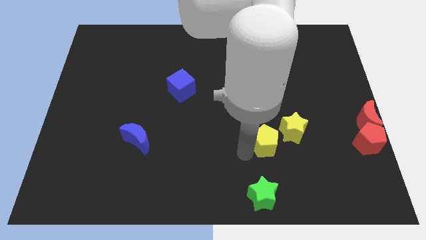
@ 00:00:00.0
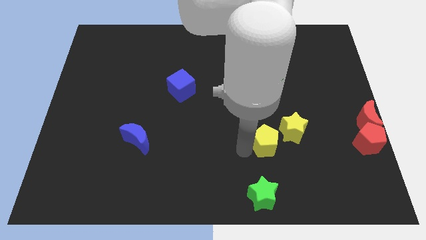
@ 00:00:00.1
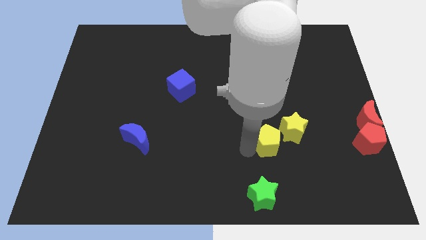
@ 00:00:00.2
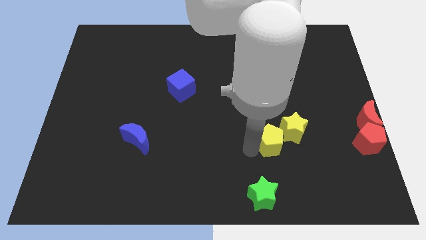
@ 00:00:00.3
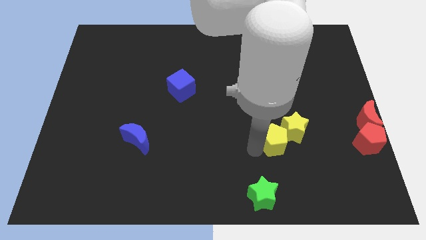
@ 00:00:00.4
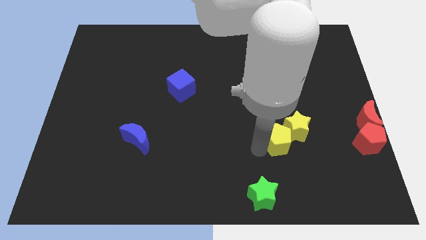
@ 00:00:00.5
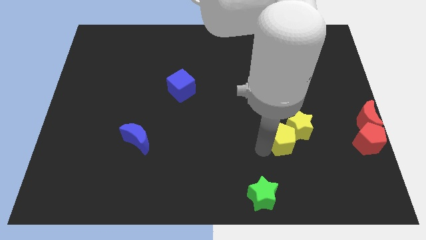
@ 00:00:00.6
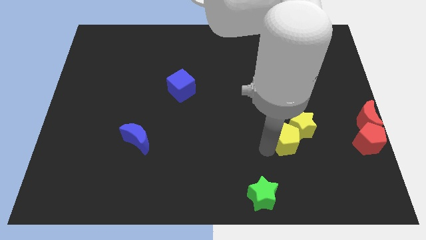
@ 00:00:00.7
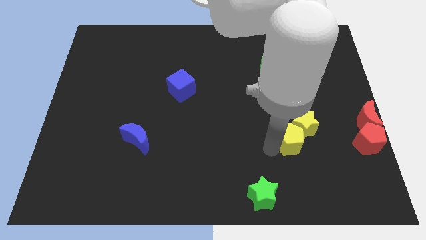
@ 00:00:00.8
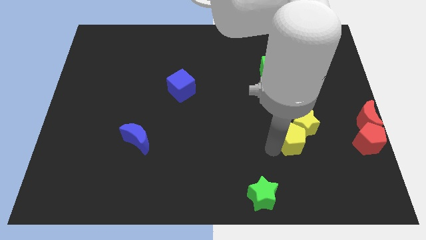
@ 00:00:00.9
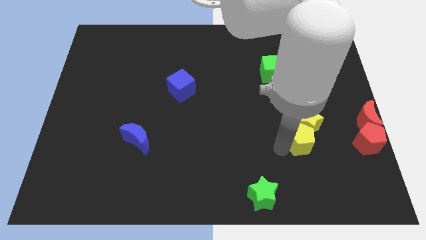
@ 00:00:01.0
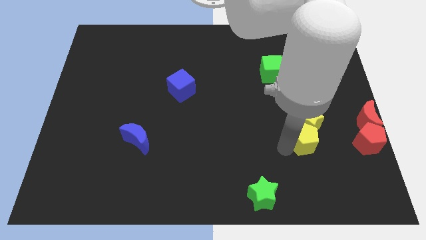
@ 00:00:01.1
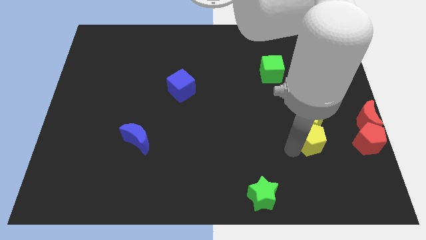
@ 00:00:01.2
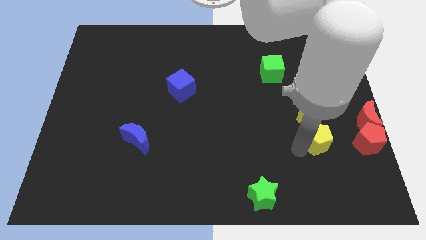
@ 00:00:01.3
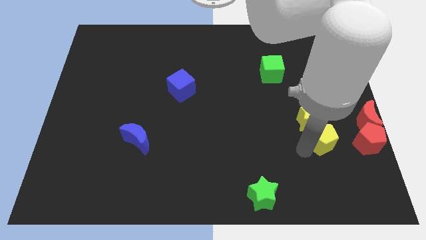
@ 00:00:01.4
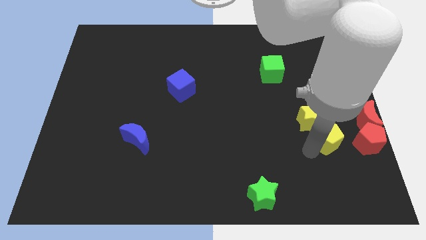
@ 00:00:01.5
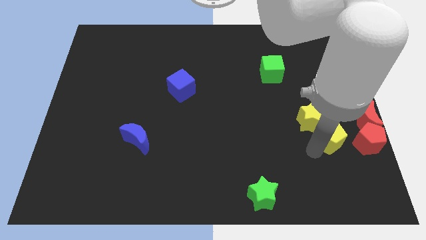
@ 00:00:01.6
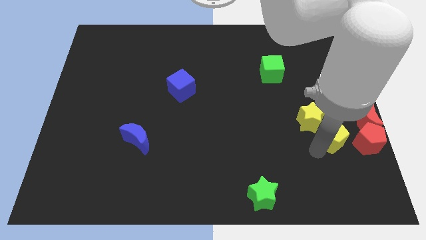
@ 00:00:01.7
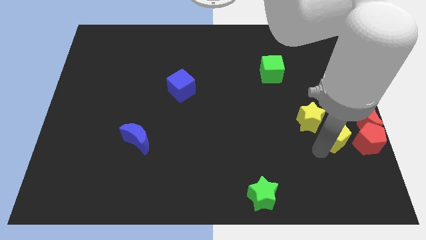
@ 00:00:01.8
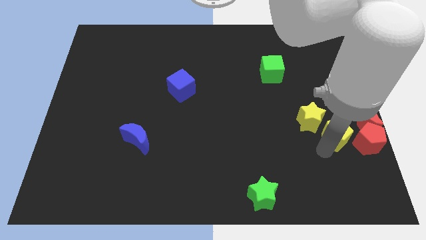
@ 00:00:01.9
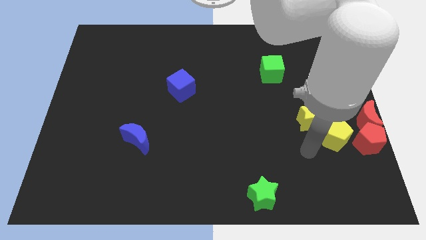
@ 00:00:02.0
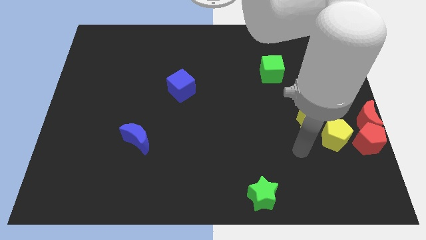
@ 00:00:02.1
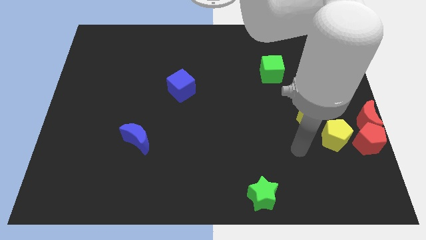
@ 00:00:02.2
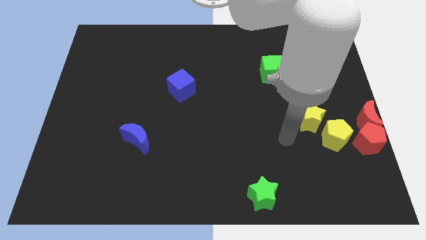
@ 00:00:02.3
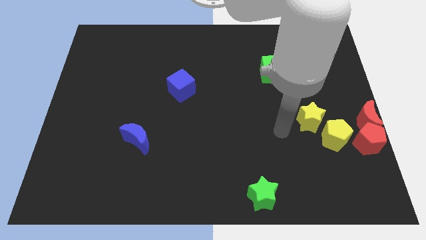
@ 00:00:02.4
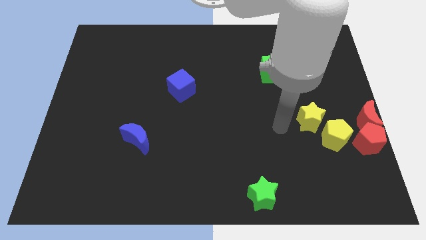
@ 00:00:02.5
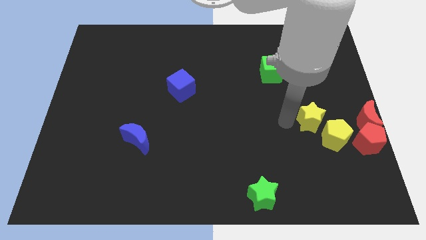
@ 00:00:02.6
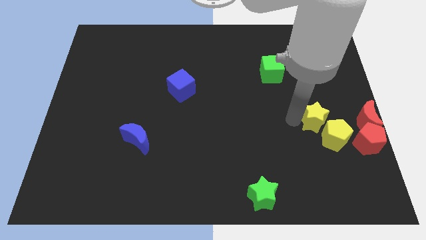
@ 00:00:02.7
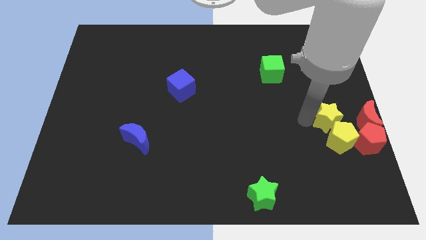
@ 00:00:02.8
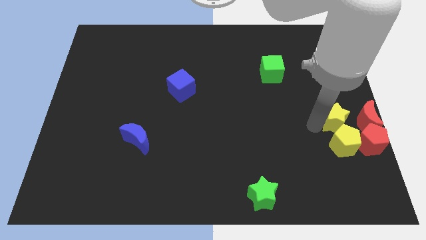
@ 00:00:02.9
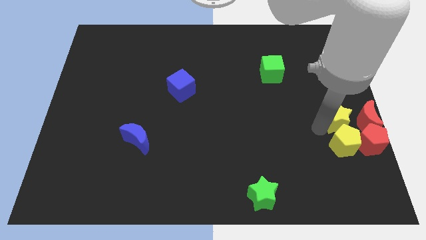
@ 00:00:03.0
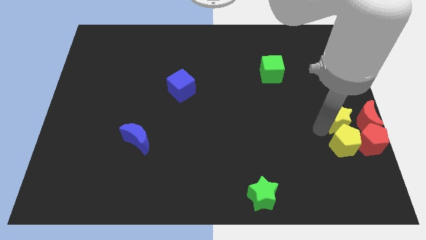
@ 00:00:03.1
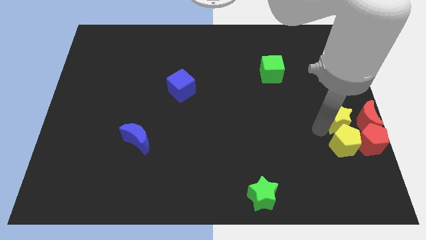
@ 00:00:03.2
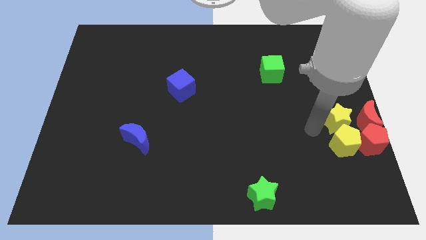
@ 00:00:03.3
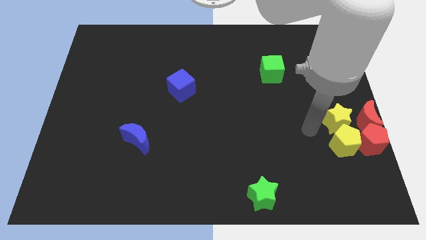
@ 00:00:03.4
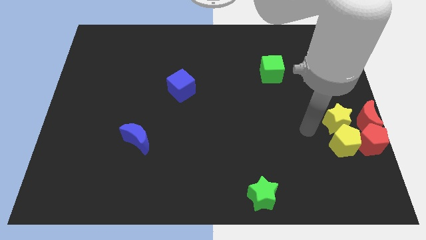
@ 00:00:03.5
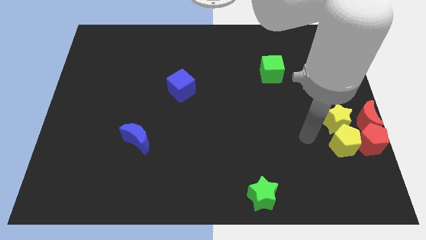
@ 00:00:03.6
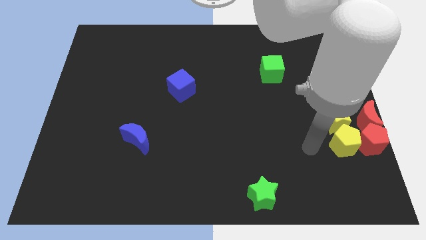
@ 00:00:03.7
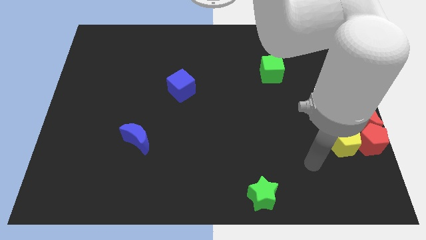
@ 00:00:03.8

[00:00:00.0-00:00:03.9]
push the yellow blocks to the left of the red blocks

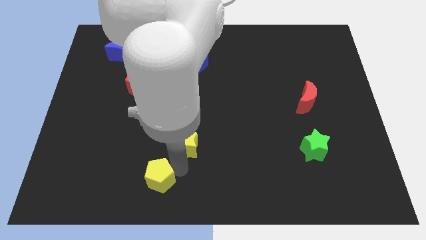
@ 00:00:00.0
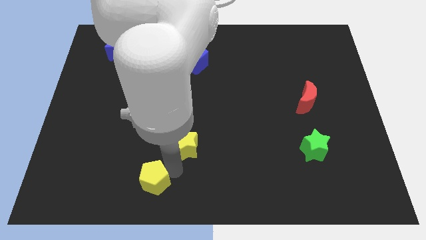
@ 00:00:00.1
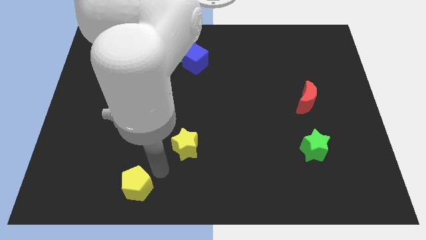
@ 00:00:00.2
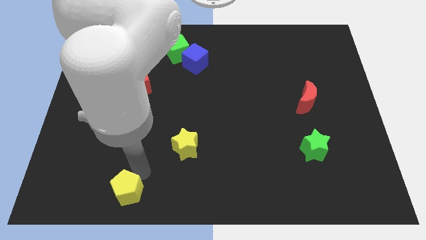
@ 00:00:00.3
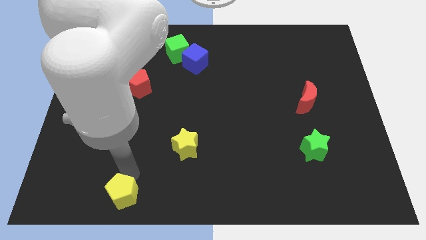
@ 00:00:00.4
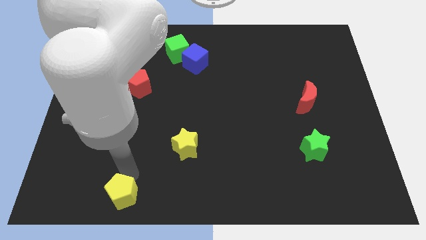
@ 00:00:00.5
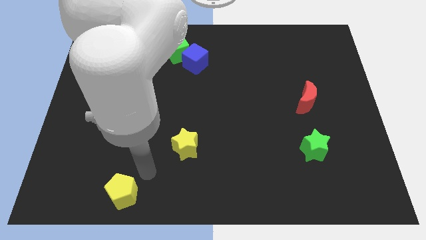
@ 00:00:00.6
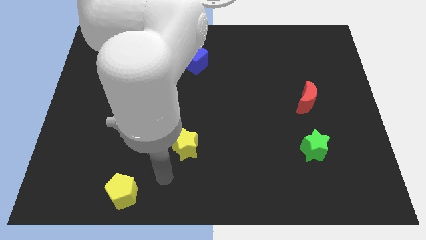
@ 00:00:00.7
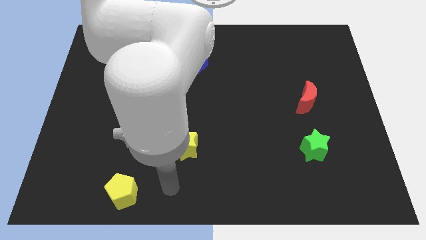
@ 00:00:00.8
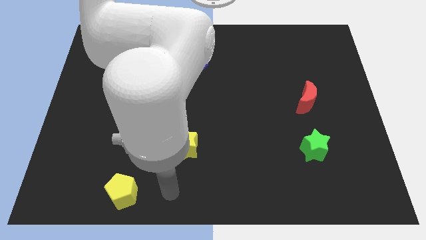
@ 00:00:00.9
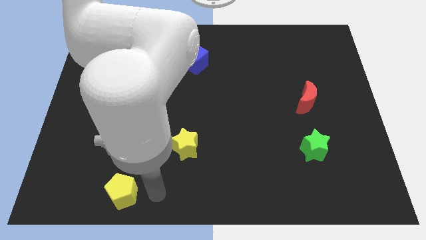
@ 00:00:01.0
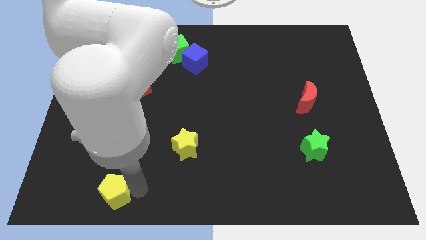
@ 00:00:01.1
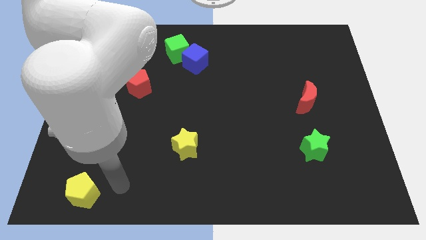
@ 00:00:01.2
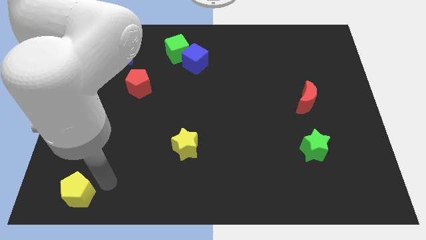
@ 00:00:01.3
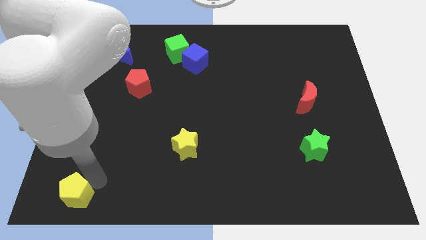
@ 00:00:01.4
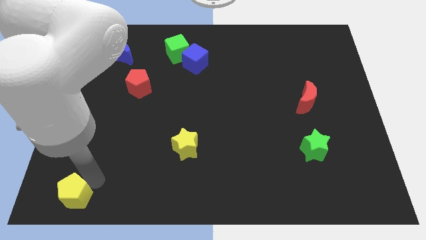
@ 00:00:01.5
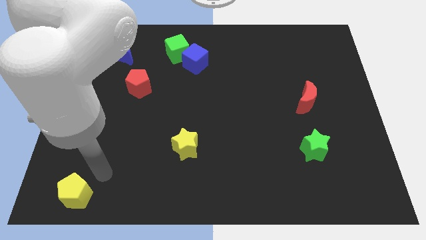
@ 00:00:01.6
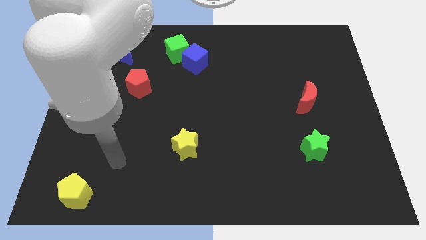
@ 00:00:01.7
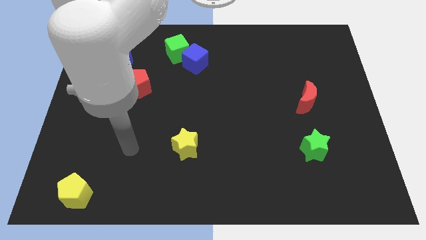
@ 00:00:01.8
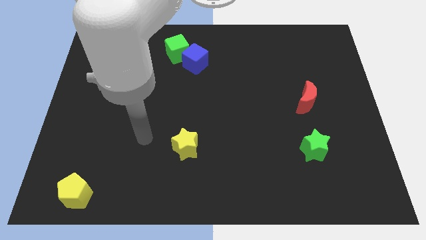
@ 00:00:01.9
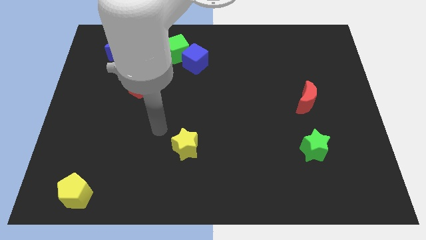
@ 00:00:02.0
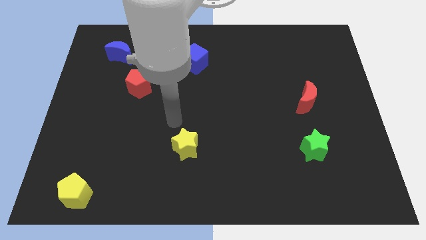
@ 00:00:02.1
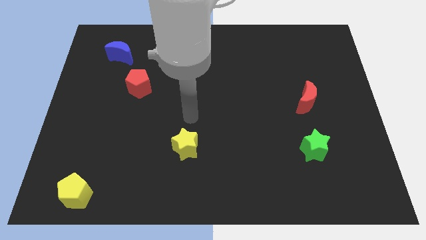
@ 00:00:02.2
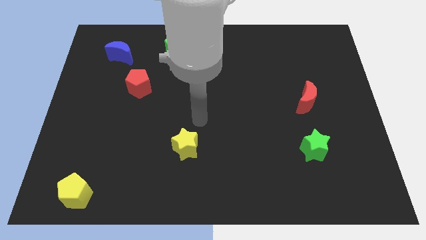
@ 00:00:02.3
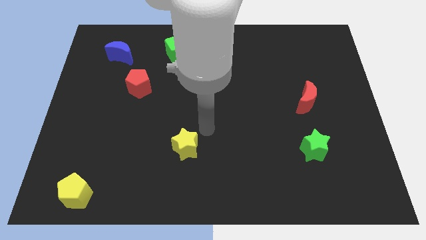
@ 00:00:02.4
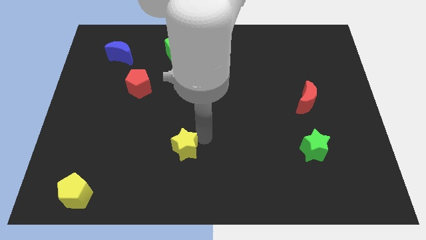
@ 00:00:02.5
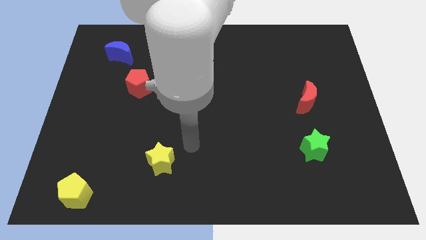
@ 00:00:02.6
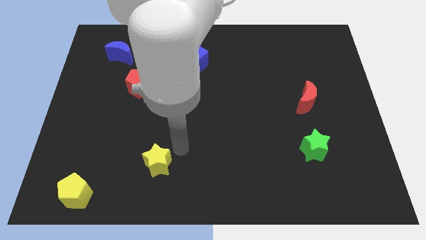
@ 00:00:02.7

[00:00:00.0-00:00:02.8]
push yellow pentagon to the bottom left side of the board

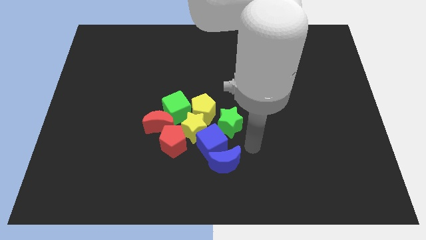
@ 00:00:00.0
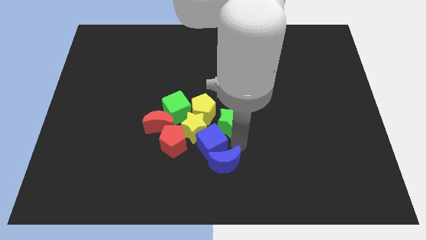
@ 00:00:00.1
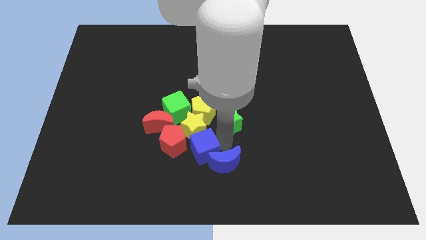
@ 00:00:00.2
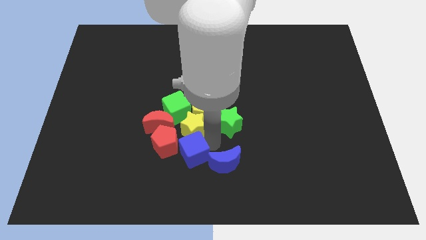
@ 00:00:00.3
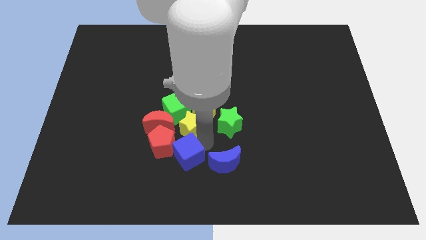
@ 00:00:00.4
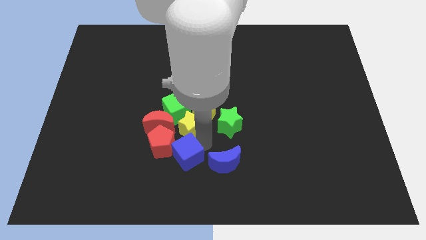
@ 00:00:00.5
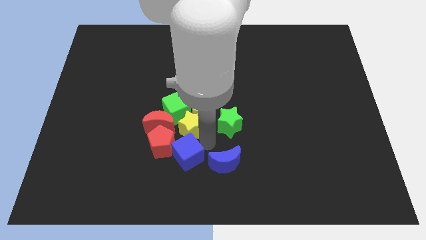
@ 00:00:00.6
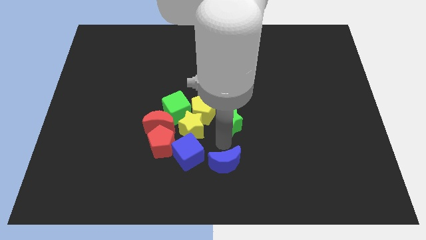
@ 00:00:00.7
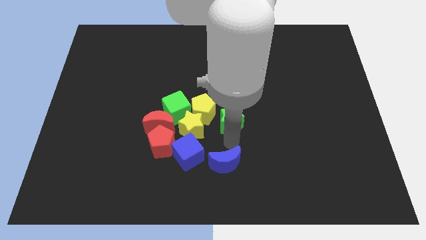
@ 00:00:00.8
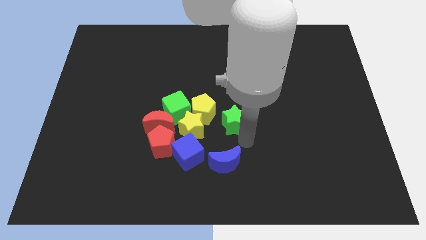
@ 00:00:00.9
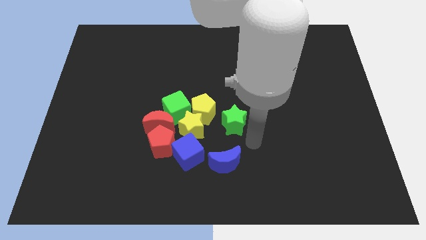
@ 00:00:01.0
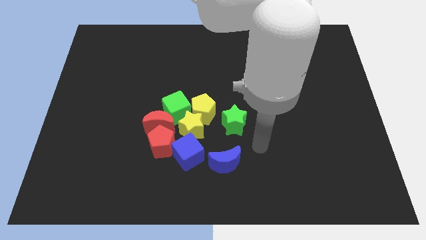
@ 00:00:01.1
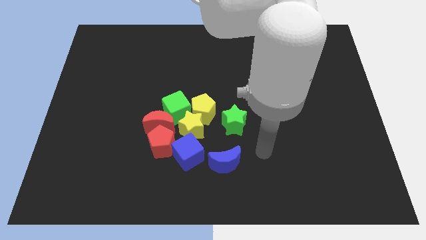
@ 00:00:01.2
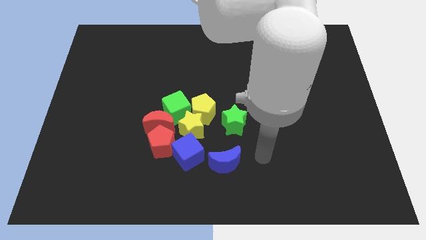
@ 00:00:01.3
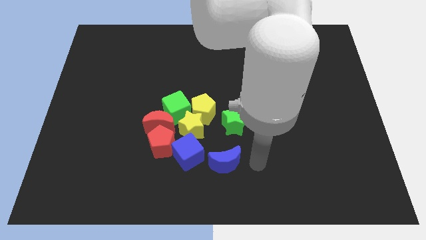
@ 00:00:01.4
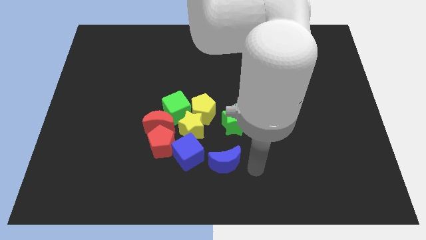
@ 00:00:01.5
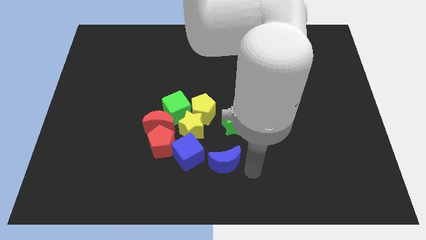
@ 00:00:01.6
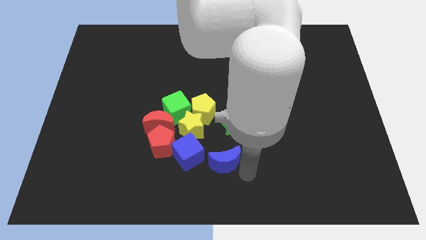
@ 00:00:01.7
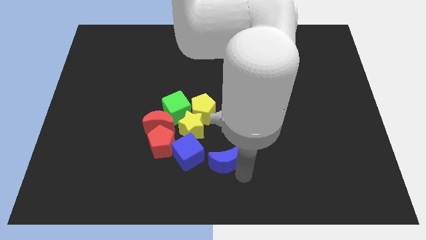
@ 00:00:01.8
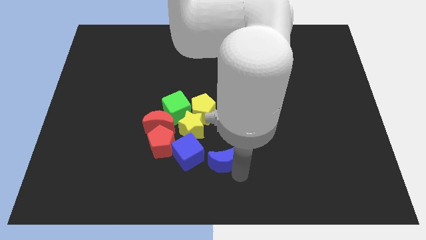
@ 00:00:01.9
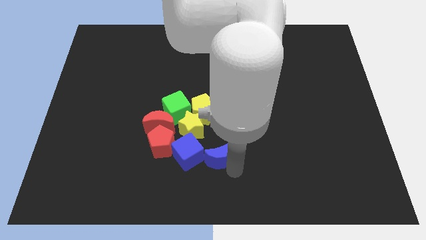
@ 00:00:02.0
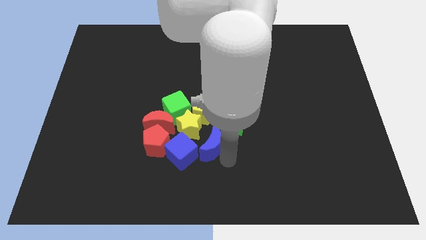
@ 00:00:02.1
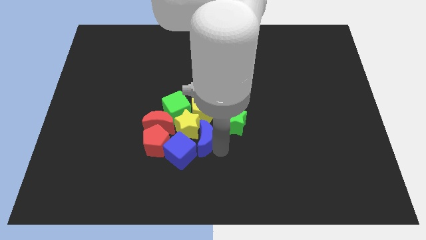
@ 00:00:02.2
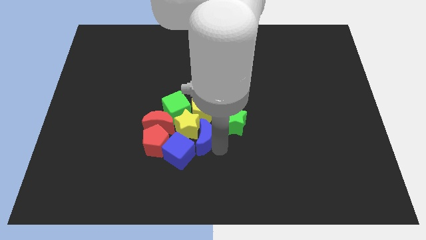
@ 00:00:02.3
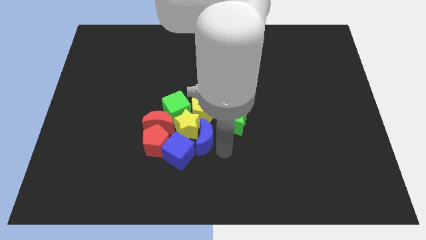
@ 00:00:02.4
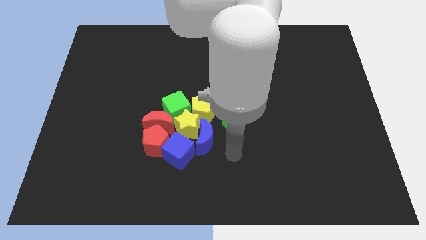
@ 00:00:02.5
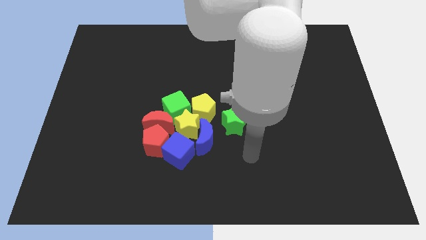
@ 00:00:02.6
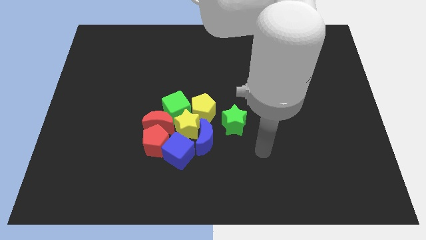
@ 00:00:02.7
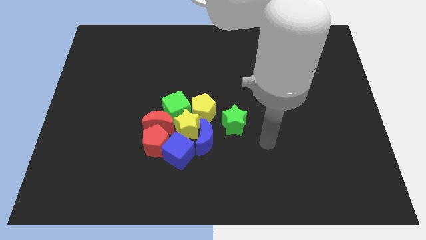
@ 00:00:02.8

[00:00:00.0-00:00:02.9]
push blue moon near yellow star
